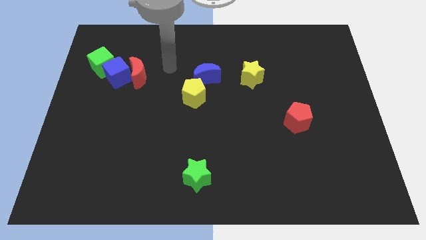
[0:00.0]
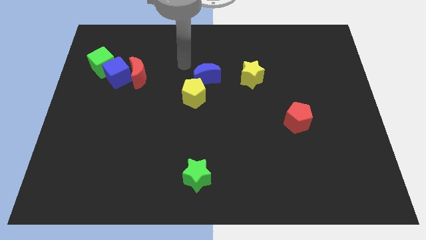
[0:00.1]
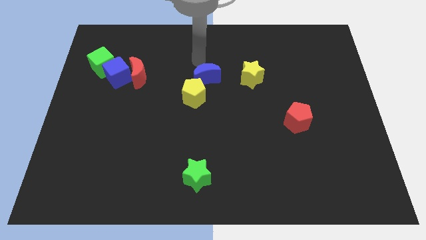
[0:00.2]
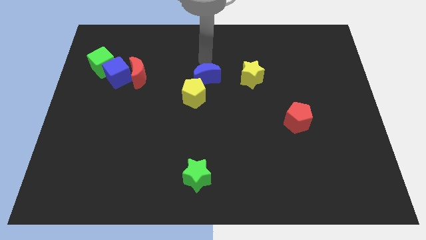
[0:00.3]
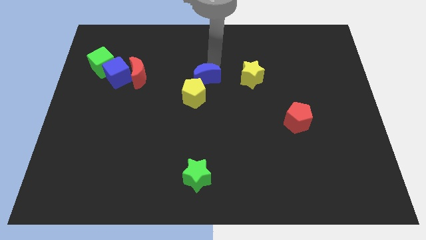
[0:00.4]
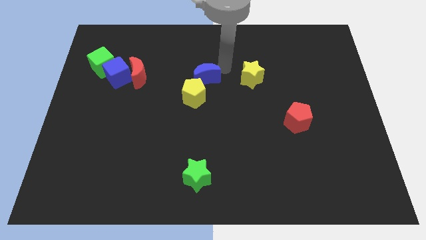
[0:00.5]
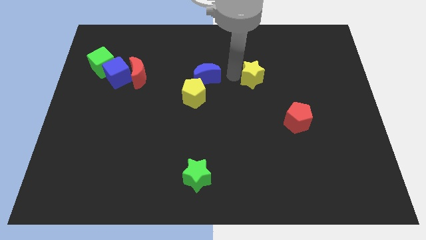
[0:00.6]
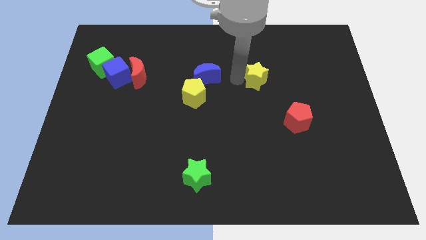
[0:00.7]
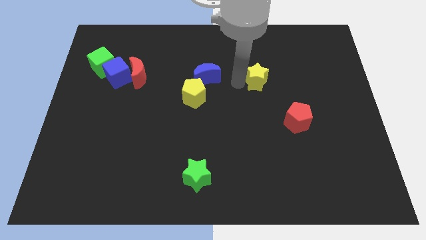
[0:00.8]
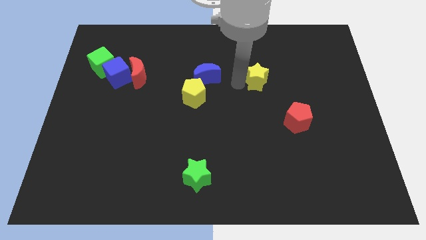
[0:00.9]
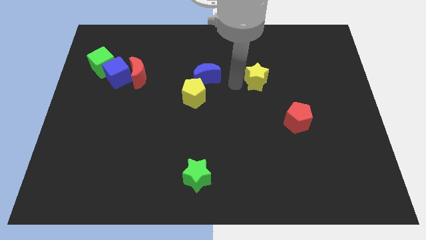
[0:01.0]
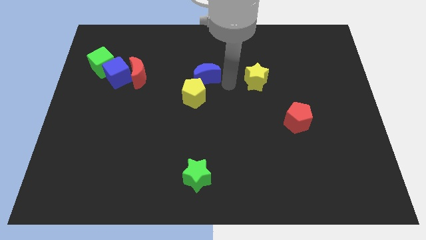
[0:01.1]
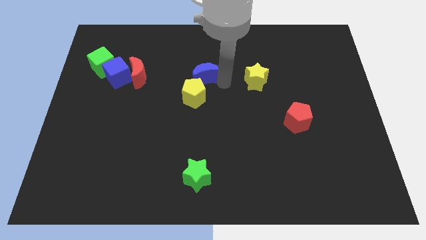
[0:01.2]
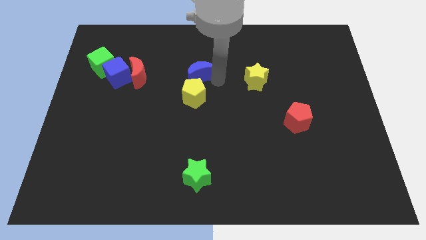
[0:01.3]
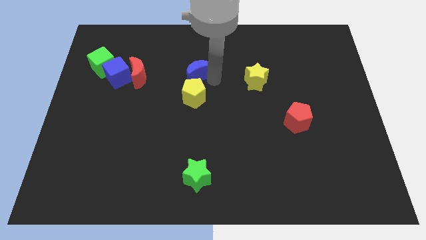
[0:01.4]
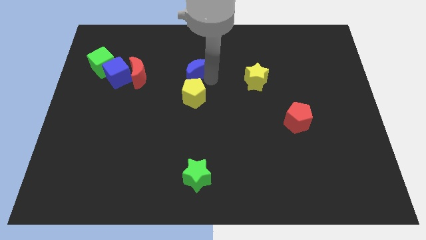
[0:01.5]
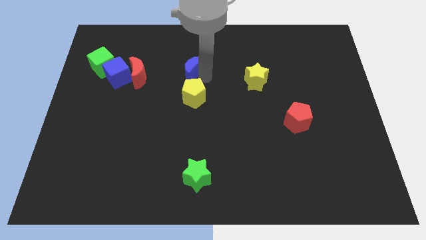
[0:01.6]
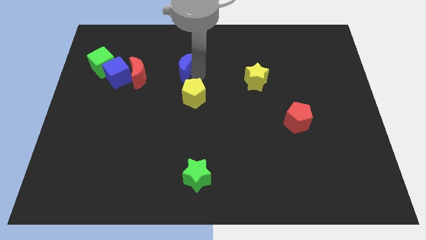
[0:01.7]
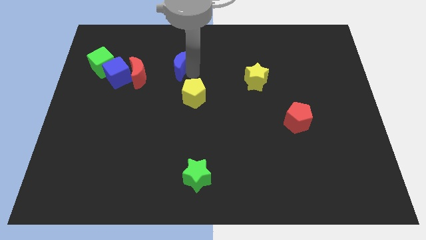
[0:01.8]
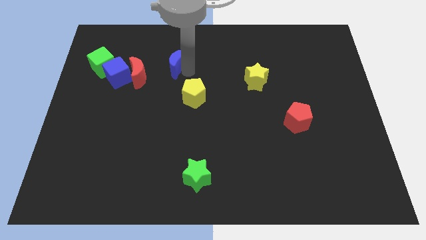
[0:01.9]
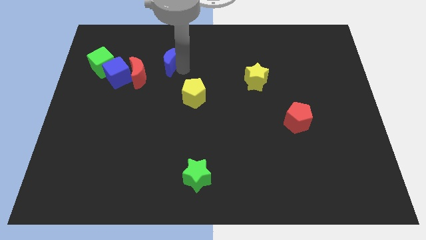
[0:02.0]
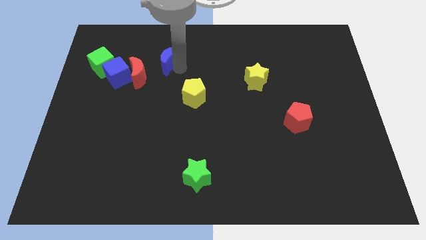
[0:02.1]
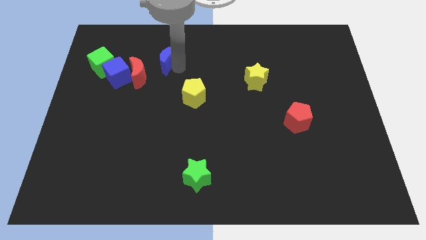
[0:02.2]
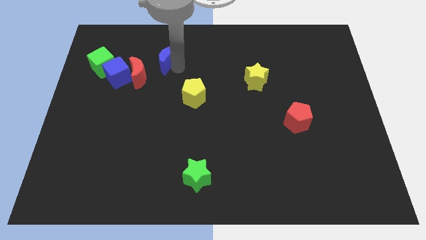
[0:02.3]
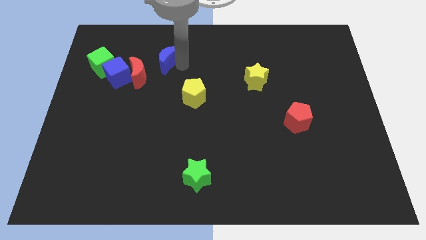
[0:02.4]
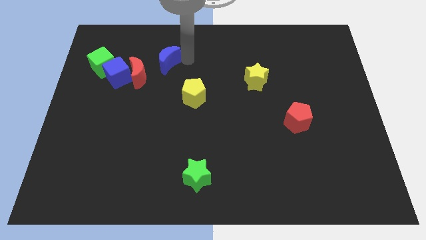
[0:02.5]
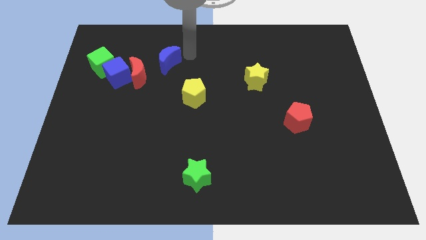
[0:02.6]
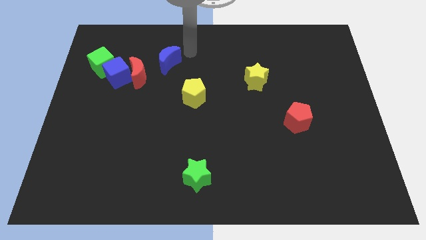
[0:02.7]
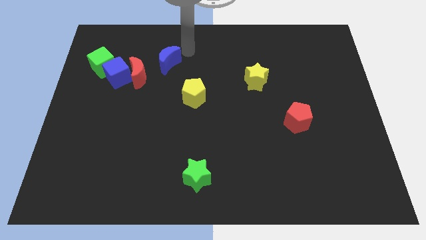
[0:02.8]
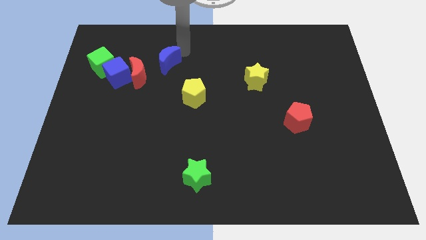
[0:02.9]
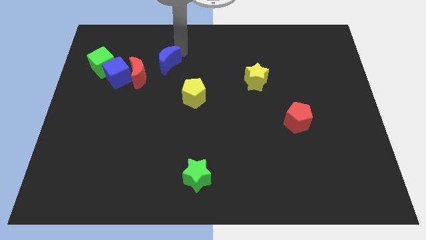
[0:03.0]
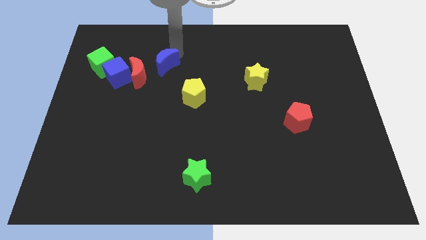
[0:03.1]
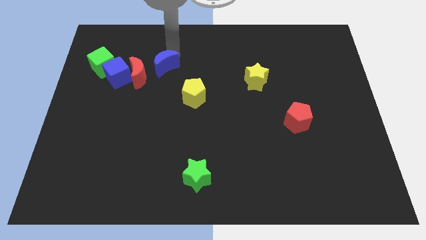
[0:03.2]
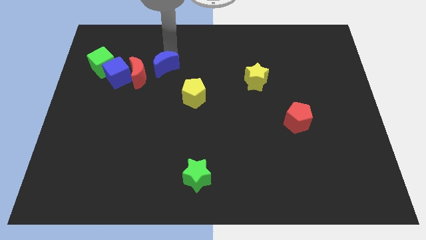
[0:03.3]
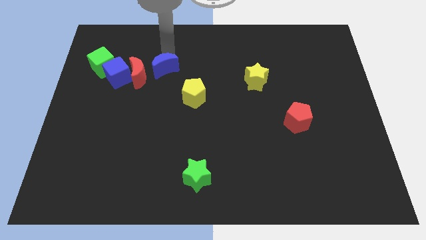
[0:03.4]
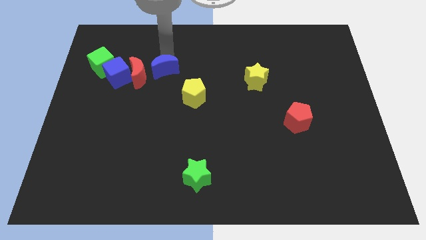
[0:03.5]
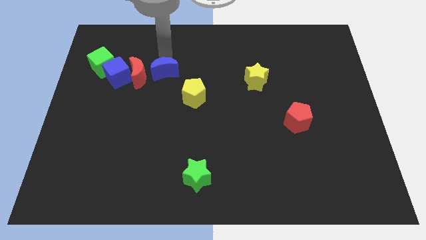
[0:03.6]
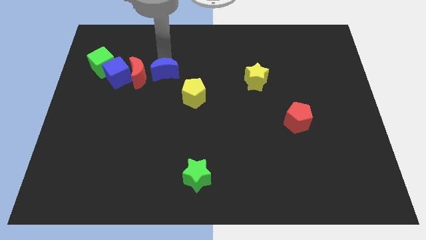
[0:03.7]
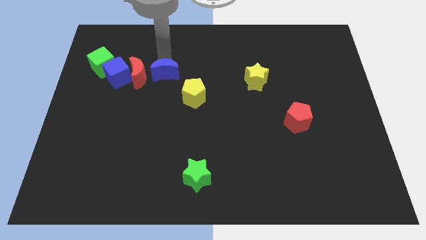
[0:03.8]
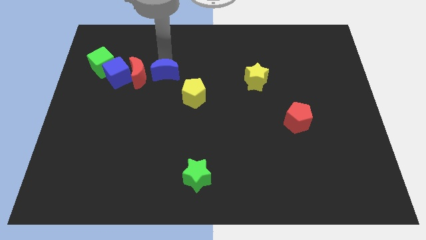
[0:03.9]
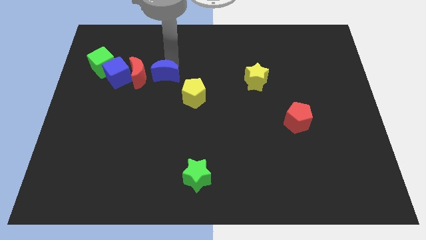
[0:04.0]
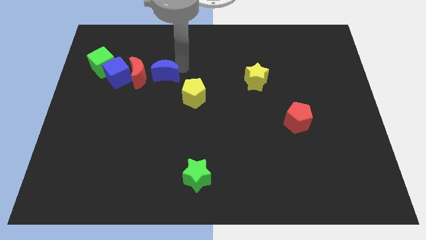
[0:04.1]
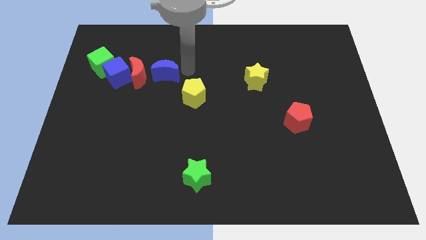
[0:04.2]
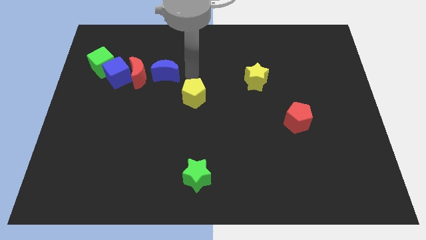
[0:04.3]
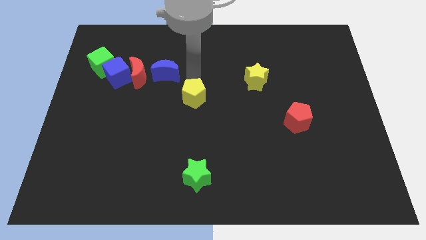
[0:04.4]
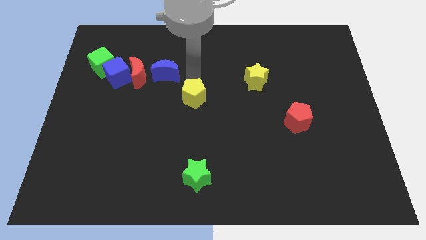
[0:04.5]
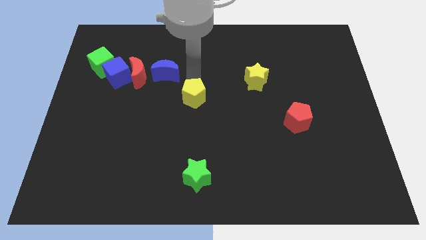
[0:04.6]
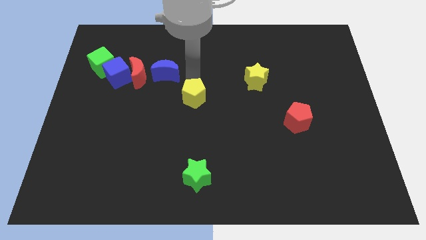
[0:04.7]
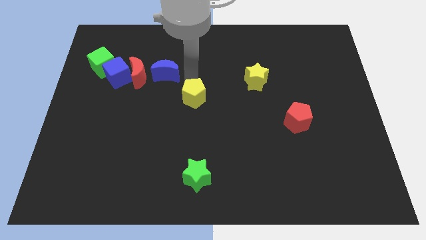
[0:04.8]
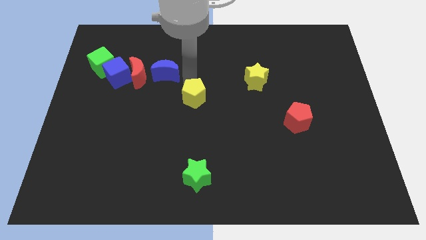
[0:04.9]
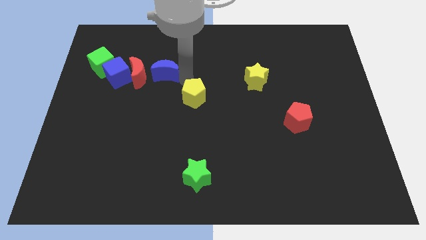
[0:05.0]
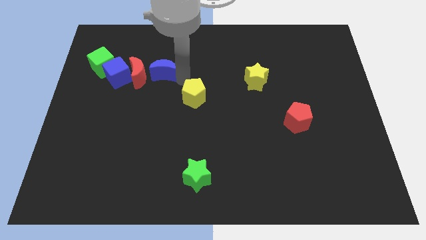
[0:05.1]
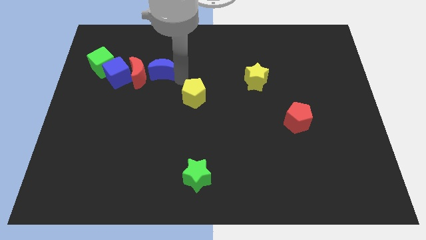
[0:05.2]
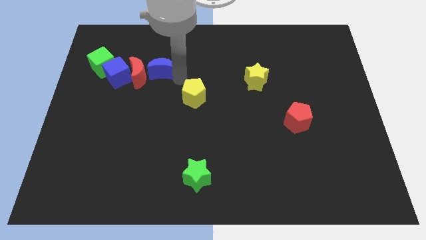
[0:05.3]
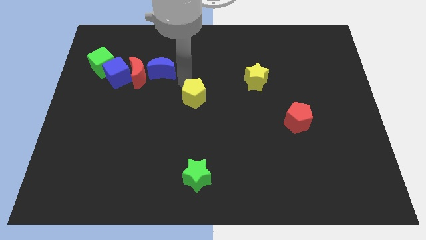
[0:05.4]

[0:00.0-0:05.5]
place the blue crescent right to the red crescent

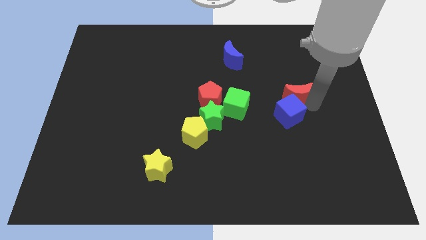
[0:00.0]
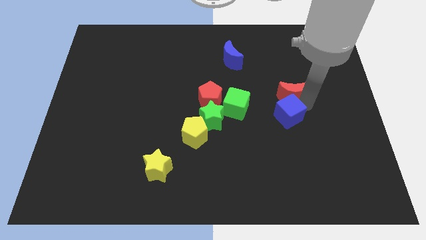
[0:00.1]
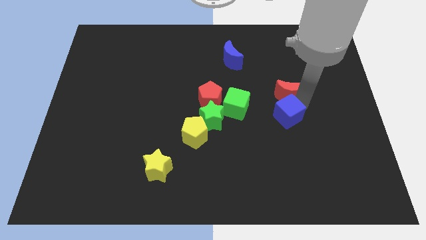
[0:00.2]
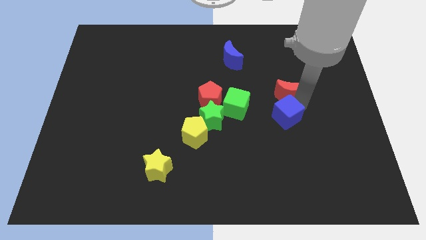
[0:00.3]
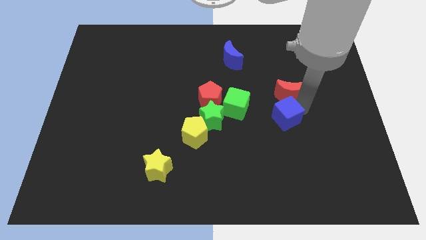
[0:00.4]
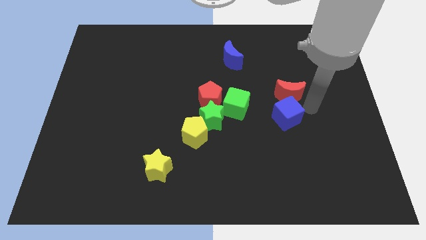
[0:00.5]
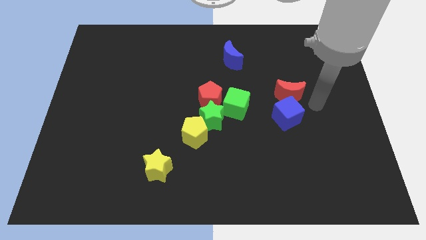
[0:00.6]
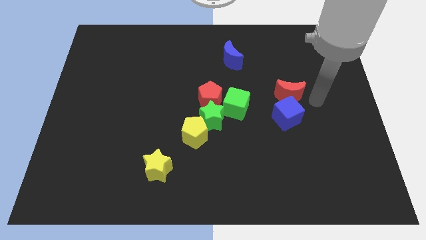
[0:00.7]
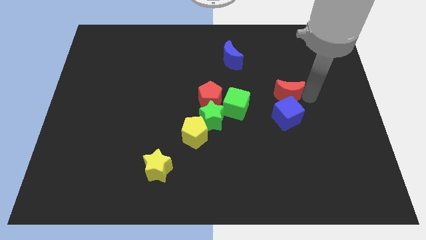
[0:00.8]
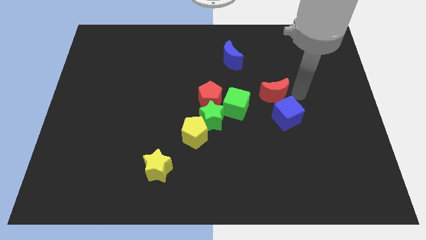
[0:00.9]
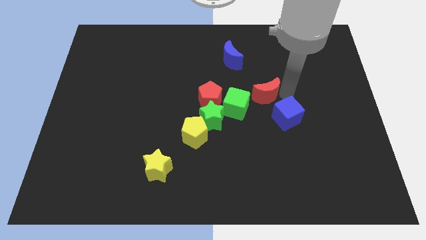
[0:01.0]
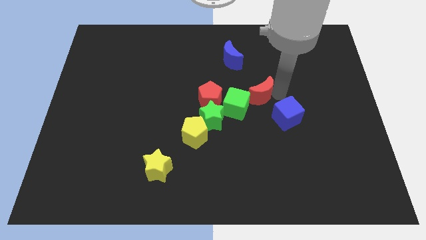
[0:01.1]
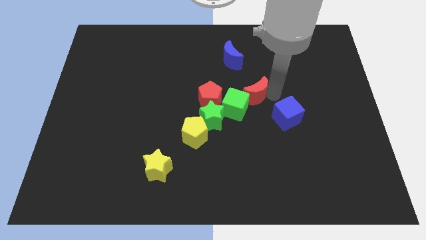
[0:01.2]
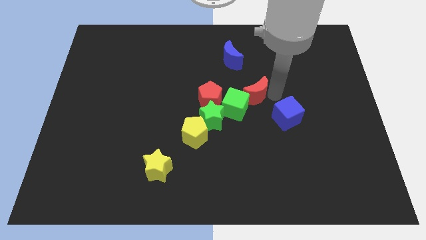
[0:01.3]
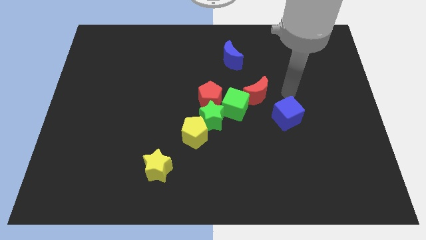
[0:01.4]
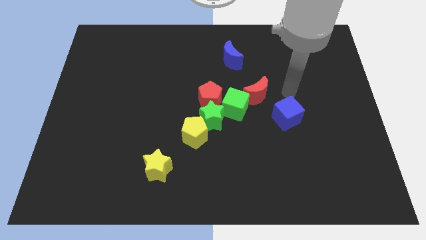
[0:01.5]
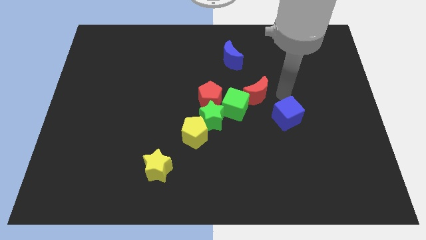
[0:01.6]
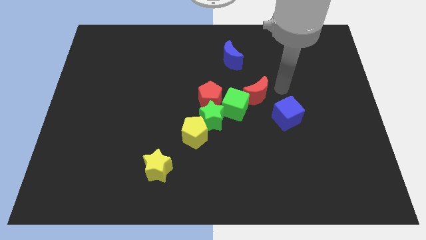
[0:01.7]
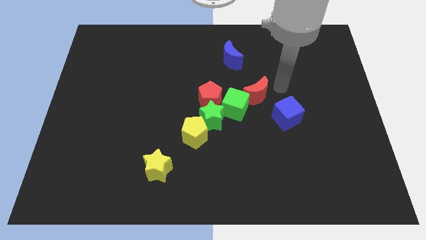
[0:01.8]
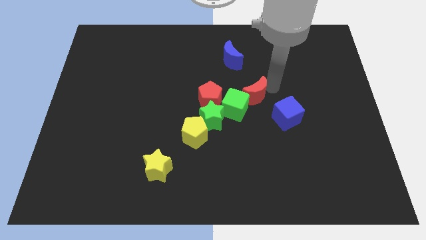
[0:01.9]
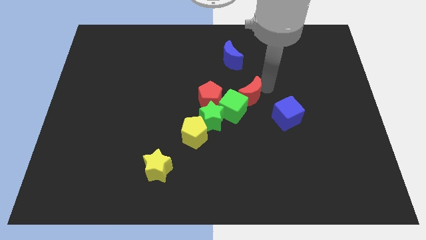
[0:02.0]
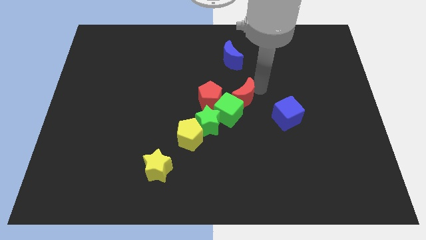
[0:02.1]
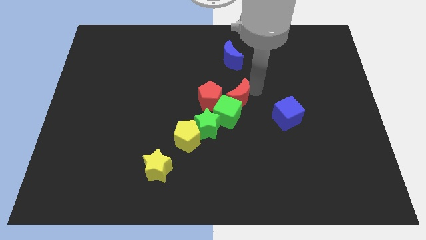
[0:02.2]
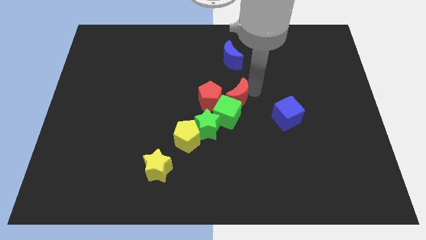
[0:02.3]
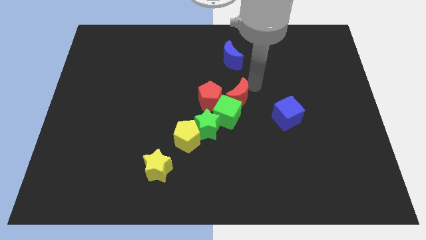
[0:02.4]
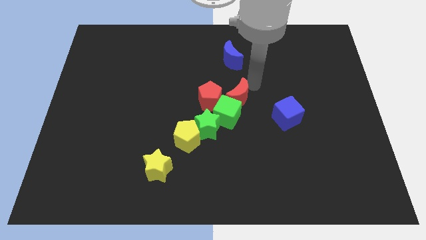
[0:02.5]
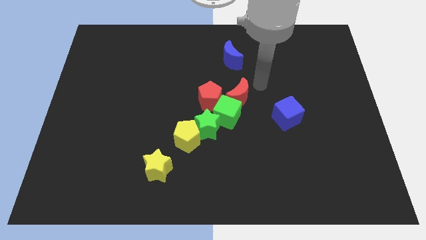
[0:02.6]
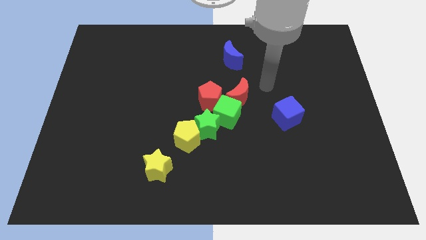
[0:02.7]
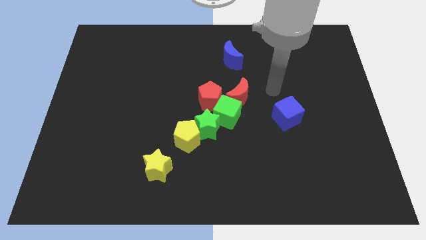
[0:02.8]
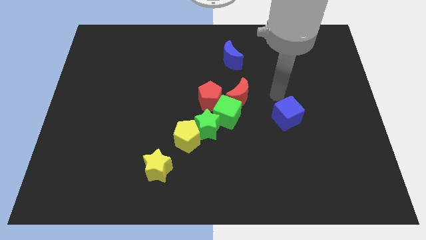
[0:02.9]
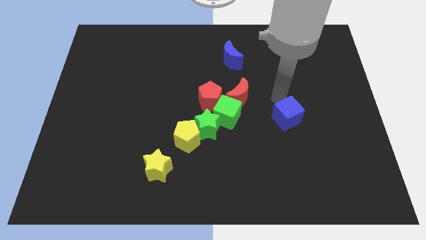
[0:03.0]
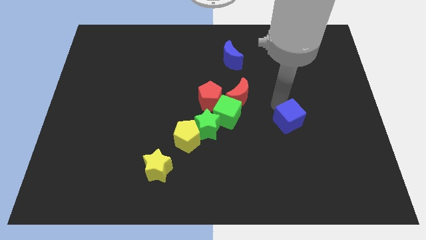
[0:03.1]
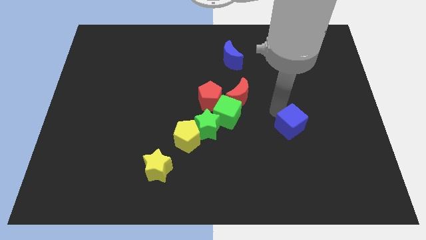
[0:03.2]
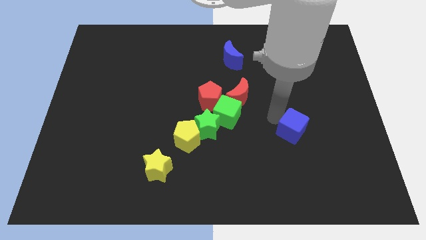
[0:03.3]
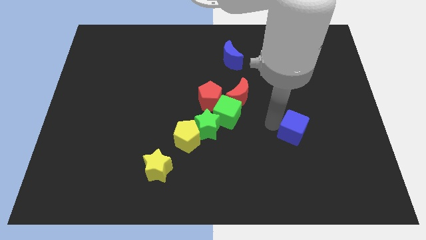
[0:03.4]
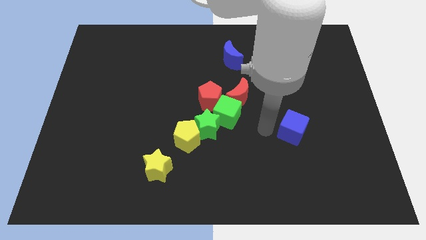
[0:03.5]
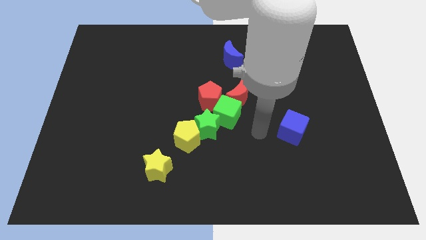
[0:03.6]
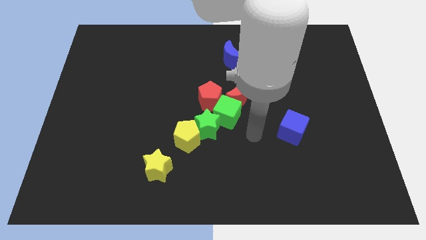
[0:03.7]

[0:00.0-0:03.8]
push the group of blocks downward
